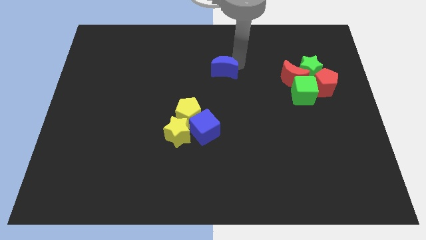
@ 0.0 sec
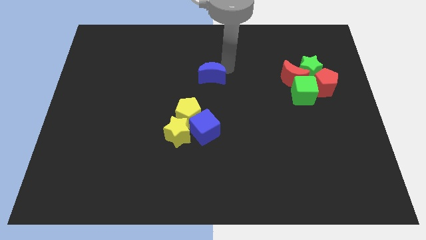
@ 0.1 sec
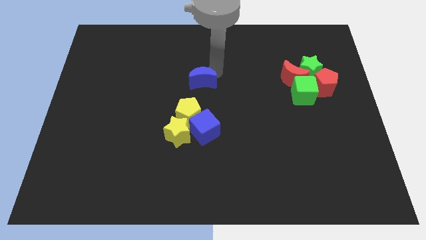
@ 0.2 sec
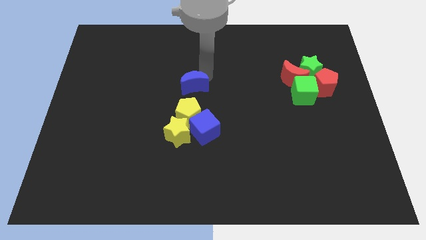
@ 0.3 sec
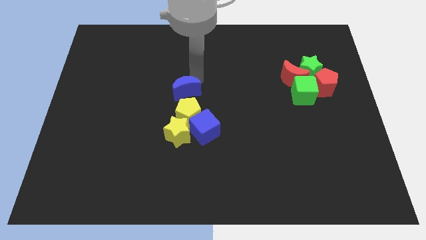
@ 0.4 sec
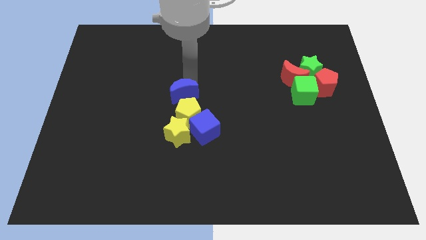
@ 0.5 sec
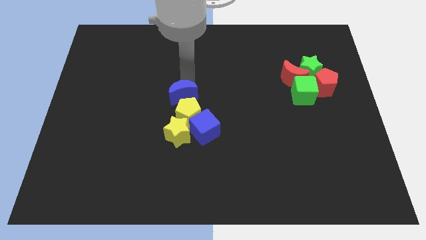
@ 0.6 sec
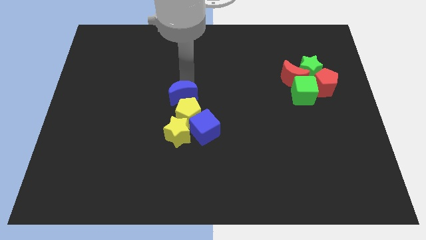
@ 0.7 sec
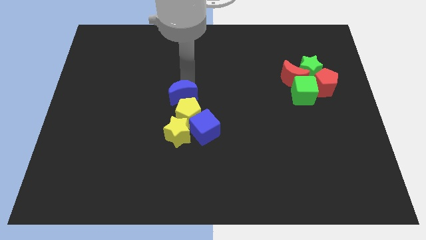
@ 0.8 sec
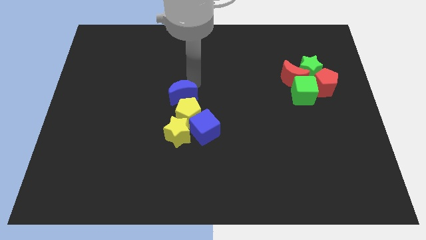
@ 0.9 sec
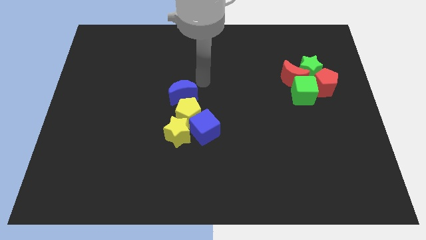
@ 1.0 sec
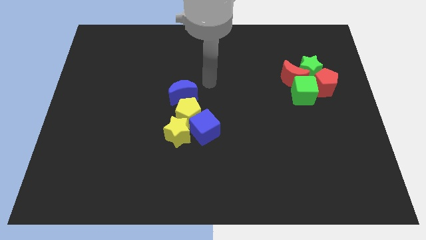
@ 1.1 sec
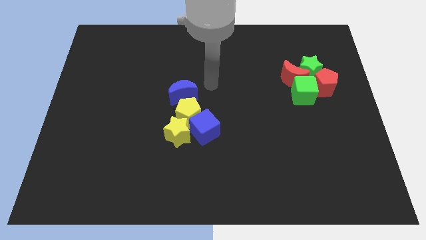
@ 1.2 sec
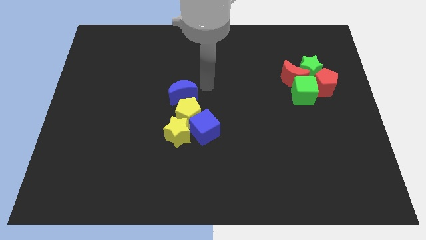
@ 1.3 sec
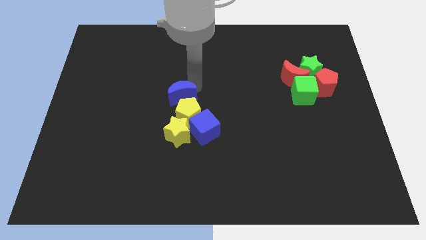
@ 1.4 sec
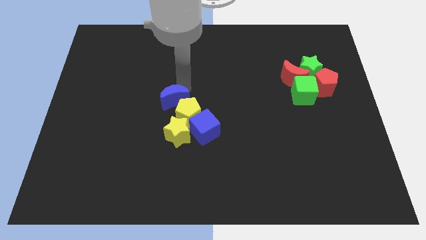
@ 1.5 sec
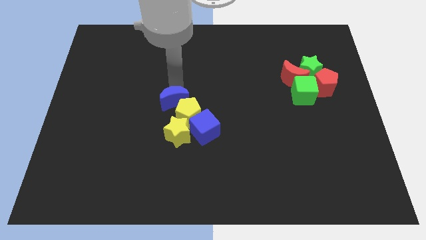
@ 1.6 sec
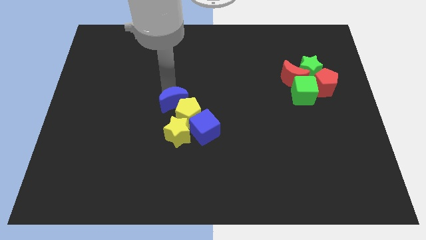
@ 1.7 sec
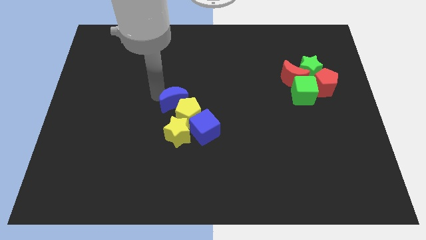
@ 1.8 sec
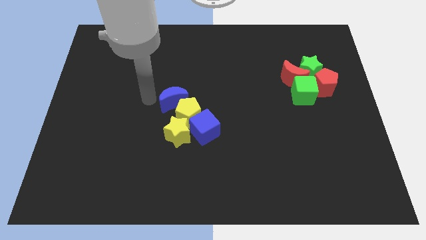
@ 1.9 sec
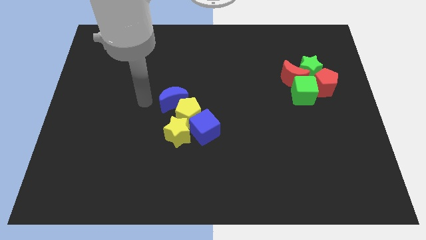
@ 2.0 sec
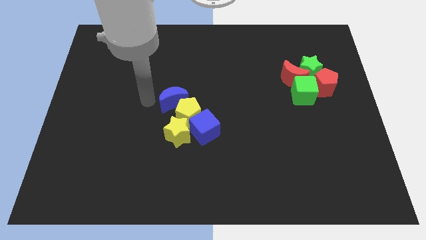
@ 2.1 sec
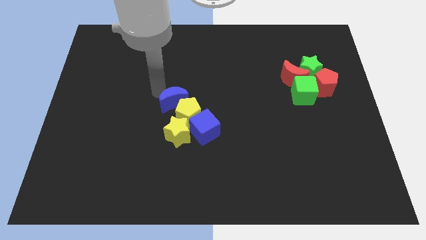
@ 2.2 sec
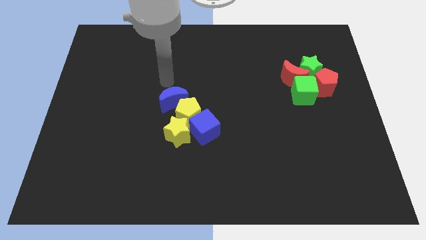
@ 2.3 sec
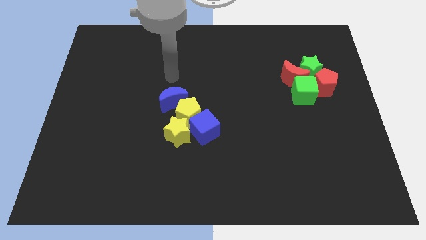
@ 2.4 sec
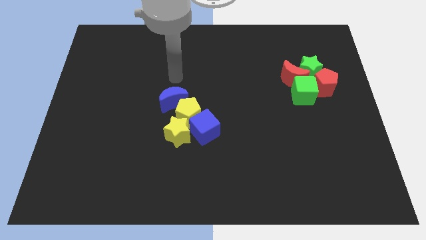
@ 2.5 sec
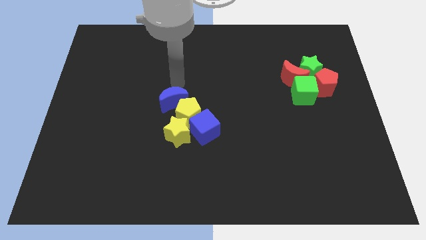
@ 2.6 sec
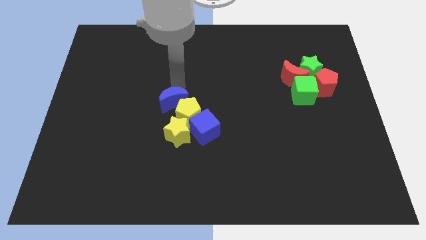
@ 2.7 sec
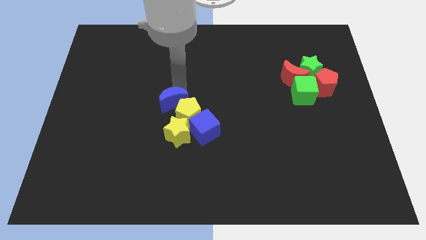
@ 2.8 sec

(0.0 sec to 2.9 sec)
move blue moon towards group of blocks

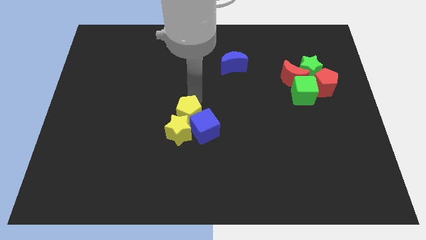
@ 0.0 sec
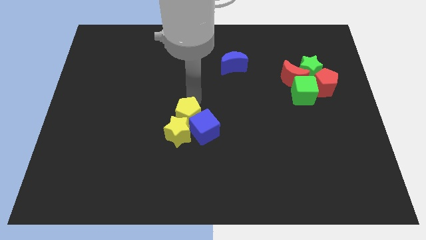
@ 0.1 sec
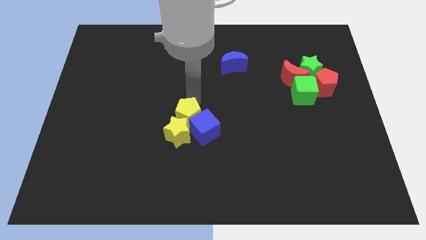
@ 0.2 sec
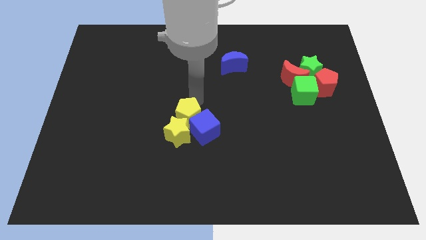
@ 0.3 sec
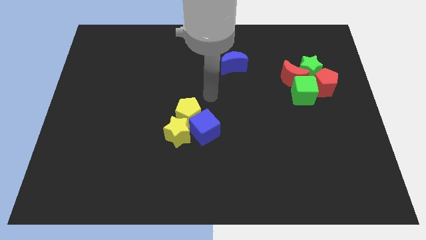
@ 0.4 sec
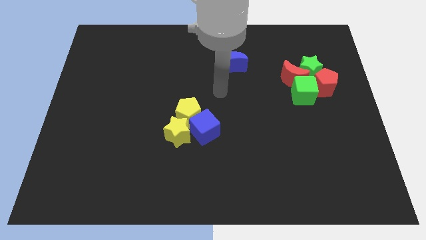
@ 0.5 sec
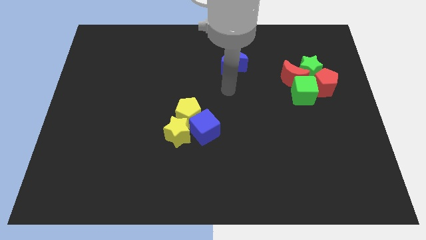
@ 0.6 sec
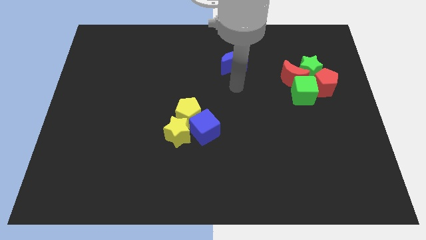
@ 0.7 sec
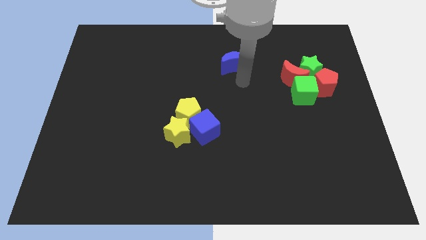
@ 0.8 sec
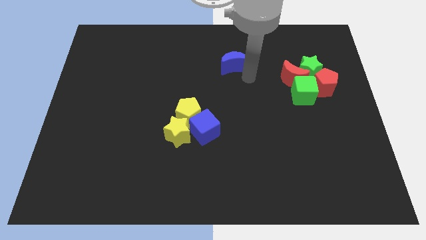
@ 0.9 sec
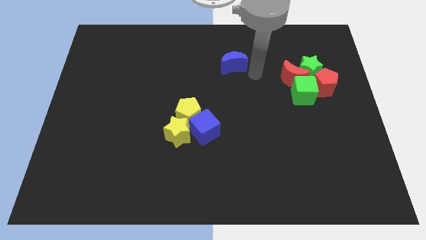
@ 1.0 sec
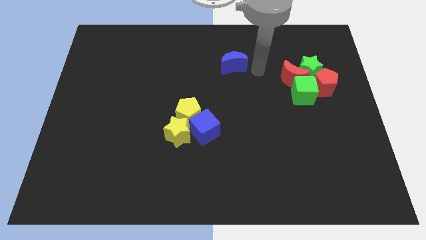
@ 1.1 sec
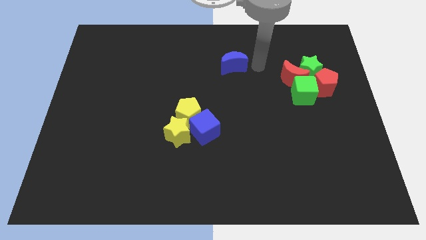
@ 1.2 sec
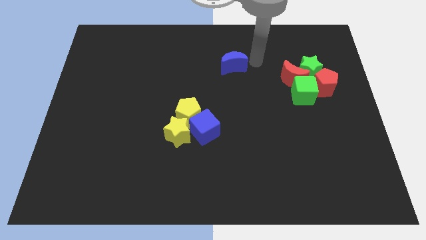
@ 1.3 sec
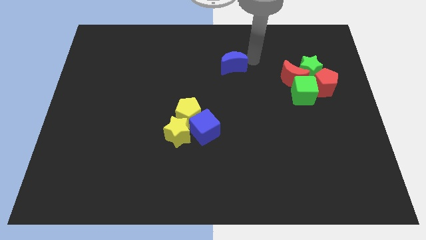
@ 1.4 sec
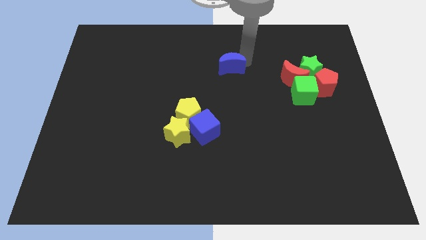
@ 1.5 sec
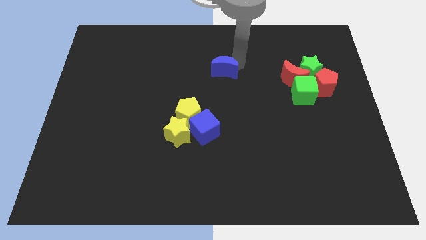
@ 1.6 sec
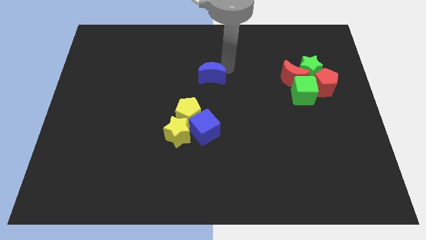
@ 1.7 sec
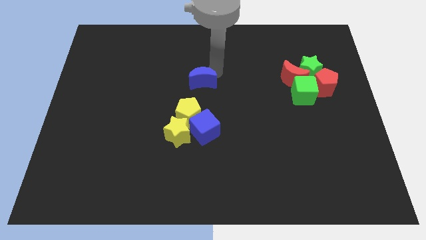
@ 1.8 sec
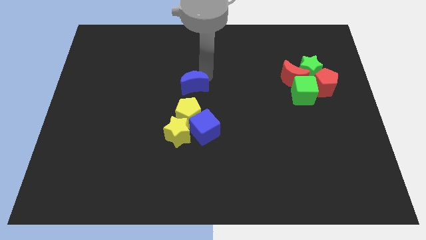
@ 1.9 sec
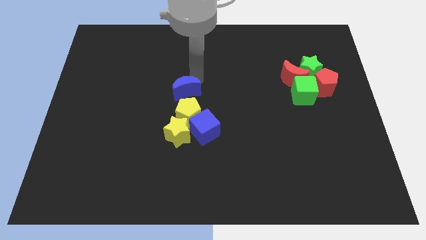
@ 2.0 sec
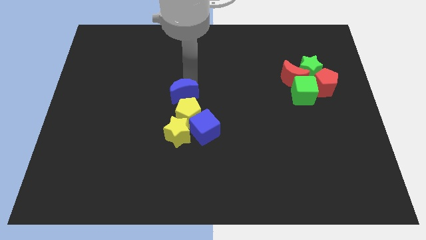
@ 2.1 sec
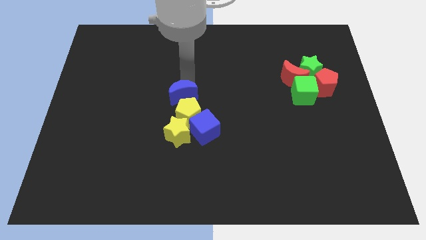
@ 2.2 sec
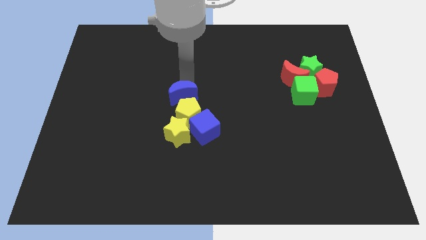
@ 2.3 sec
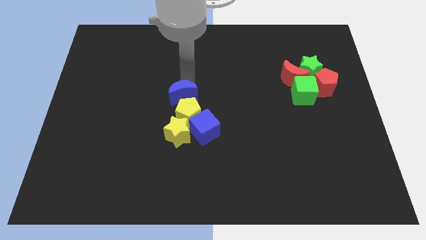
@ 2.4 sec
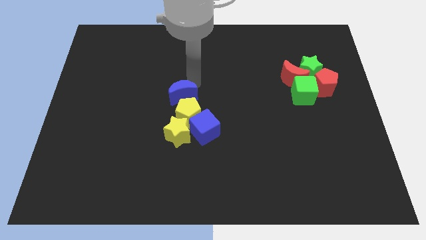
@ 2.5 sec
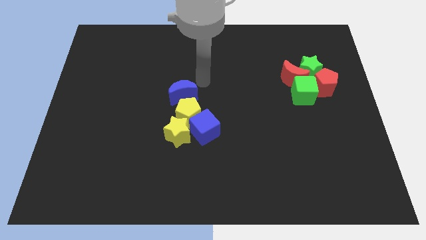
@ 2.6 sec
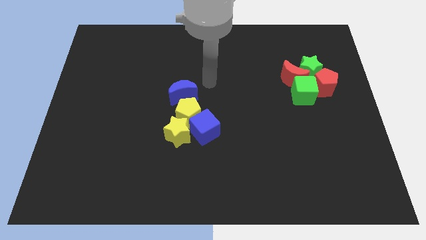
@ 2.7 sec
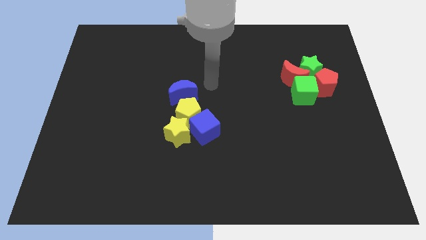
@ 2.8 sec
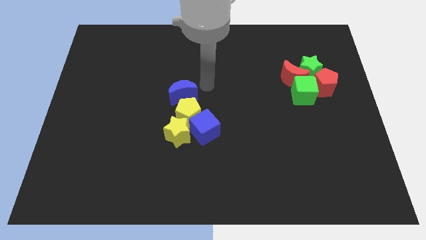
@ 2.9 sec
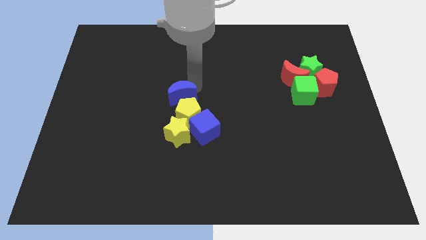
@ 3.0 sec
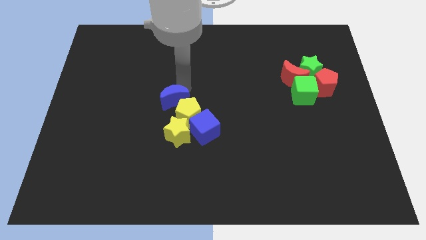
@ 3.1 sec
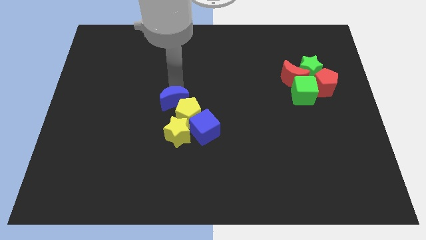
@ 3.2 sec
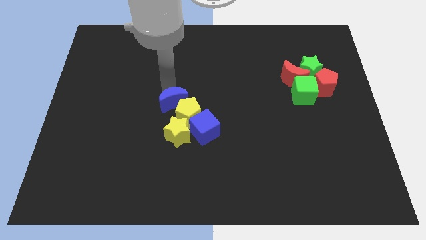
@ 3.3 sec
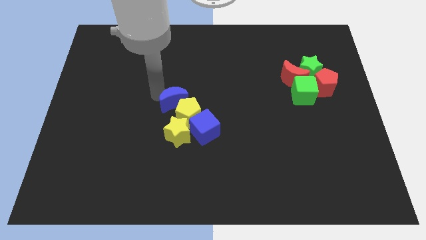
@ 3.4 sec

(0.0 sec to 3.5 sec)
place the blue moon on top of yellow pentagon

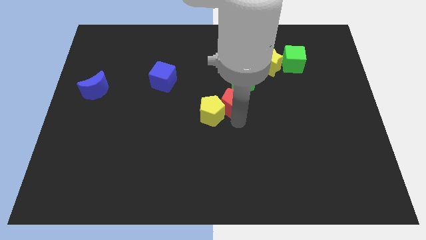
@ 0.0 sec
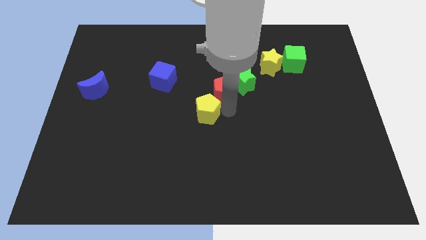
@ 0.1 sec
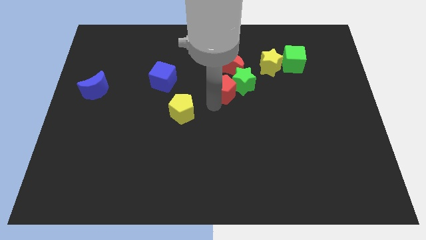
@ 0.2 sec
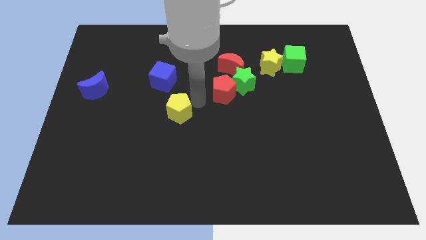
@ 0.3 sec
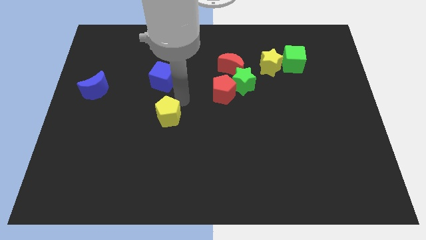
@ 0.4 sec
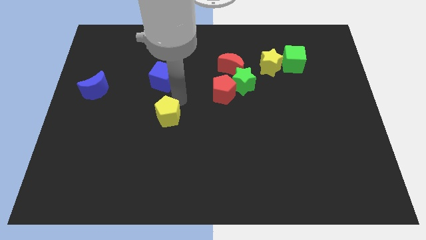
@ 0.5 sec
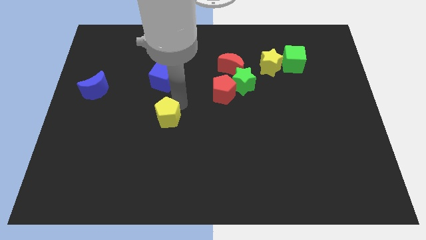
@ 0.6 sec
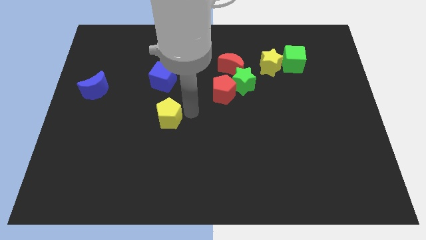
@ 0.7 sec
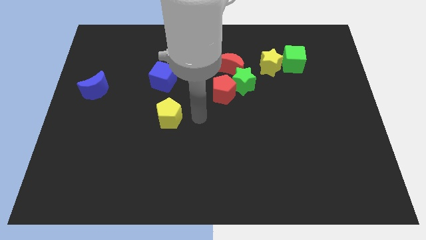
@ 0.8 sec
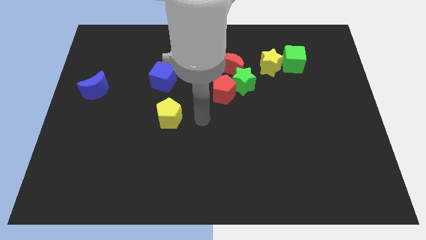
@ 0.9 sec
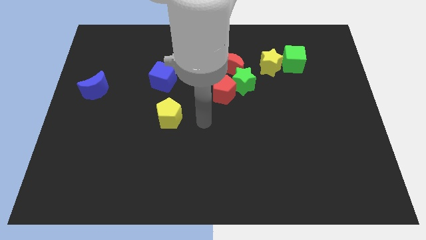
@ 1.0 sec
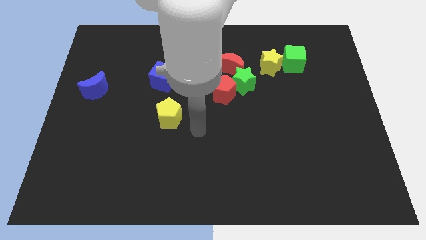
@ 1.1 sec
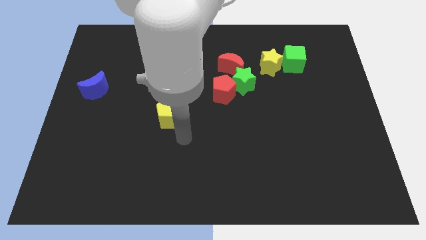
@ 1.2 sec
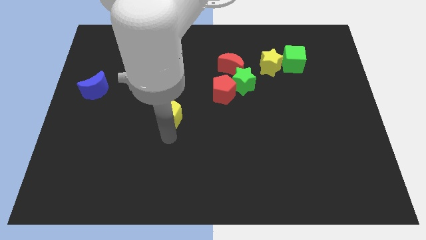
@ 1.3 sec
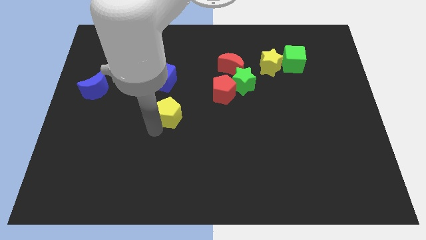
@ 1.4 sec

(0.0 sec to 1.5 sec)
separate the yellow pentagon from red pentagon

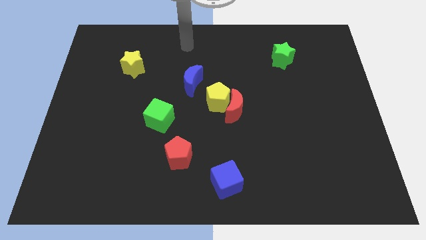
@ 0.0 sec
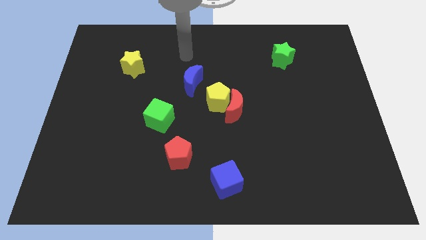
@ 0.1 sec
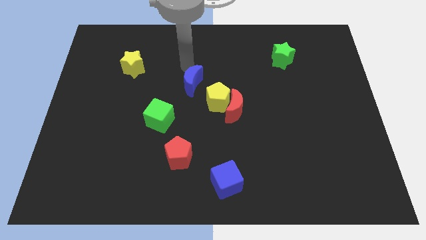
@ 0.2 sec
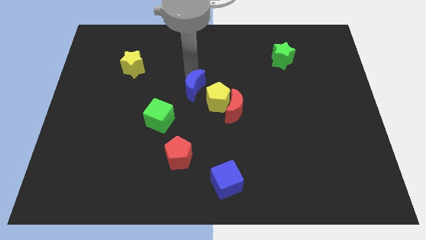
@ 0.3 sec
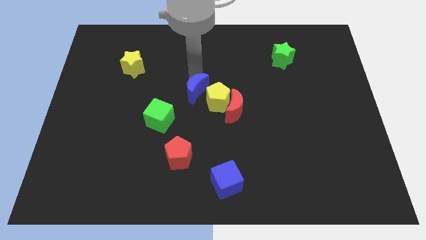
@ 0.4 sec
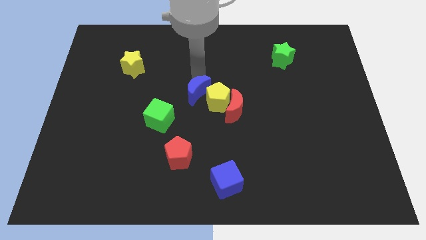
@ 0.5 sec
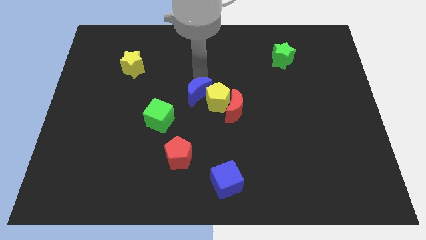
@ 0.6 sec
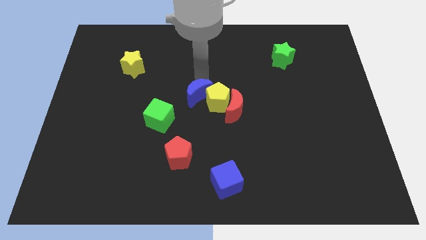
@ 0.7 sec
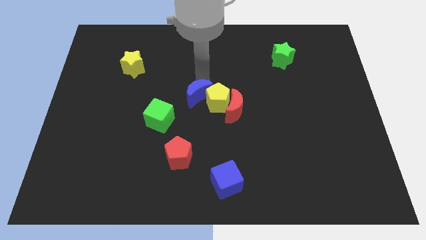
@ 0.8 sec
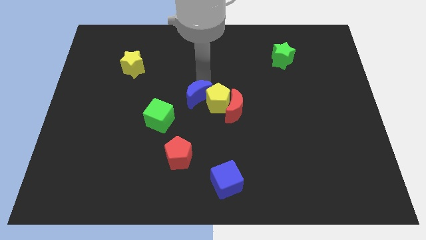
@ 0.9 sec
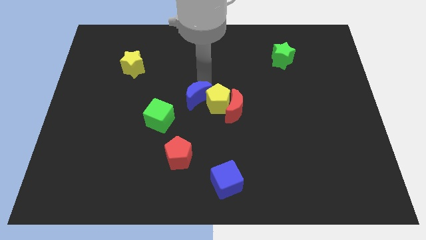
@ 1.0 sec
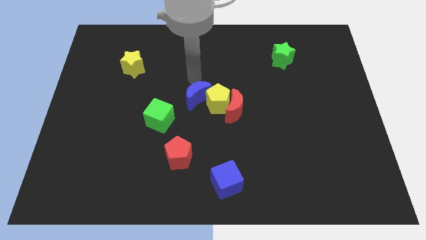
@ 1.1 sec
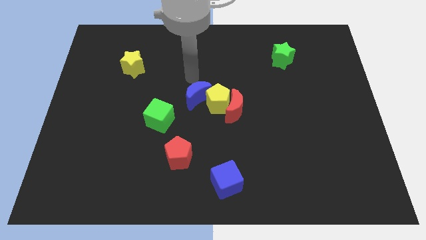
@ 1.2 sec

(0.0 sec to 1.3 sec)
push the blue moon into yellow pentagon
